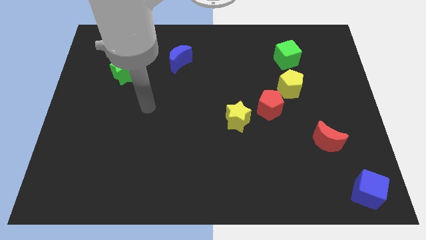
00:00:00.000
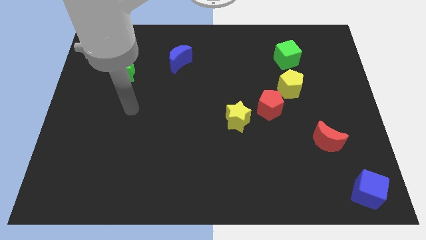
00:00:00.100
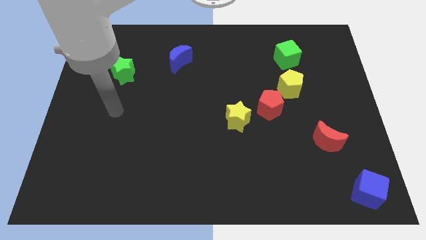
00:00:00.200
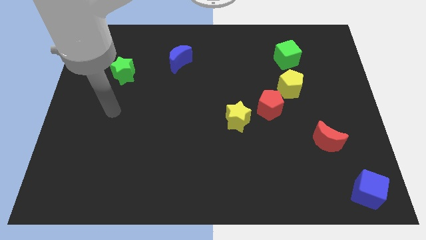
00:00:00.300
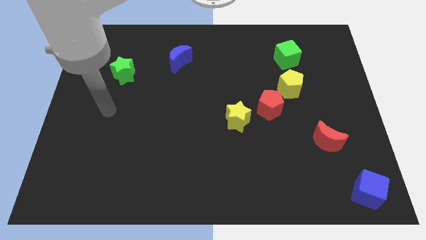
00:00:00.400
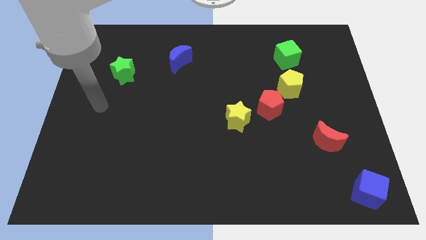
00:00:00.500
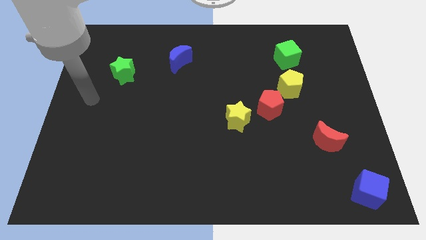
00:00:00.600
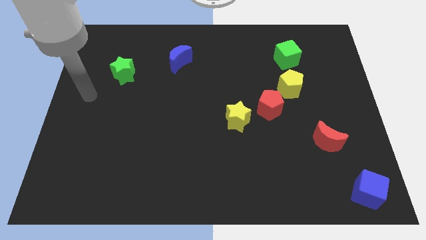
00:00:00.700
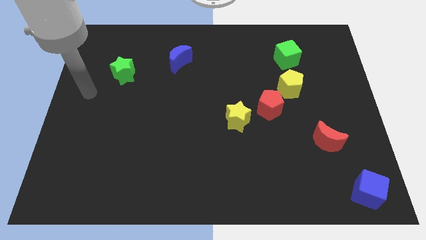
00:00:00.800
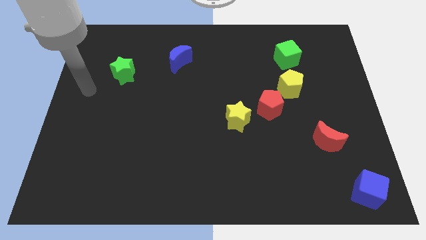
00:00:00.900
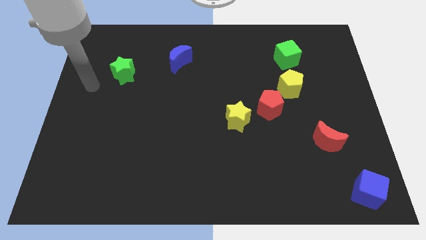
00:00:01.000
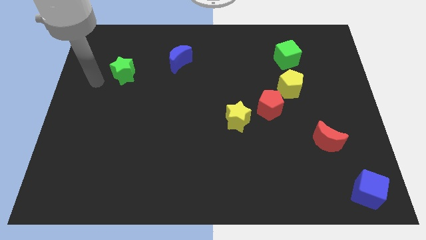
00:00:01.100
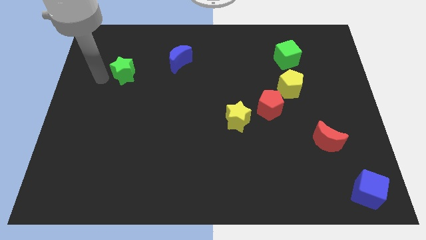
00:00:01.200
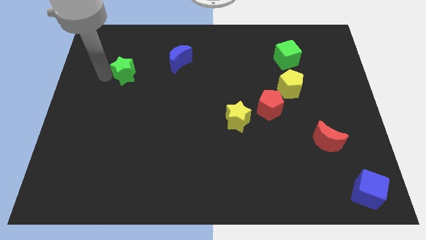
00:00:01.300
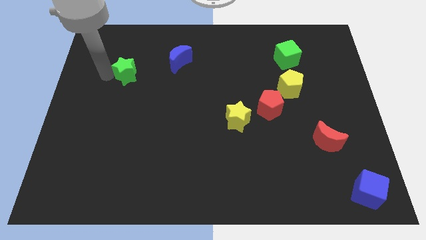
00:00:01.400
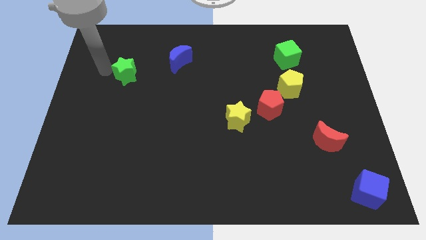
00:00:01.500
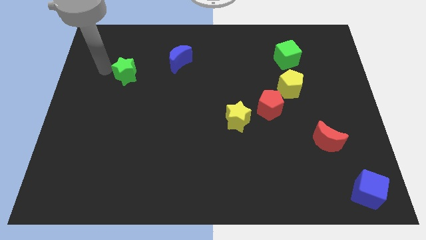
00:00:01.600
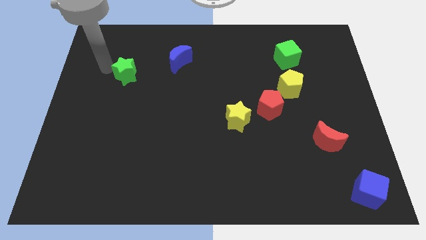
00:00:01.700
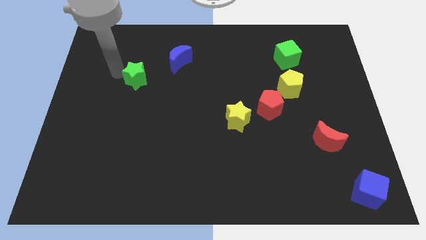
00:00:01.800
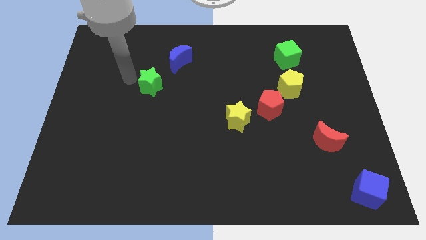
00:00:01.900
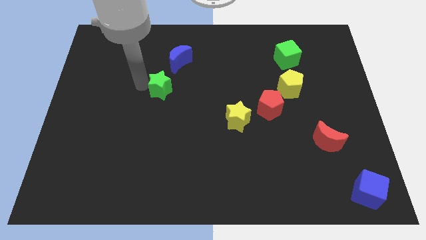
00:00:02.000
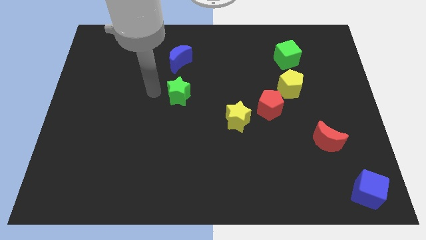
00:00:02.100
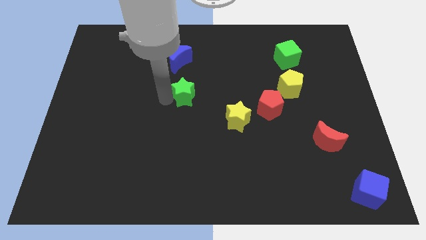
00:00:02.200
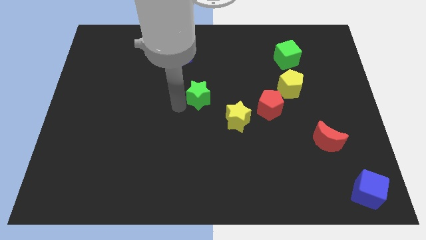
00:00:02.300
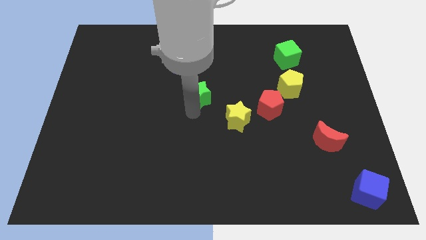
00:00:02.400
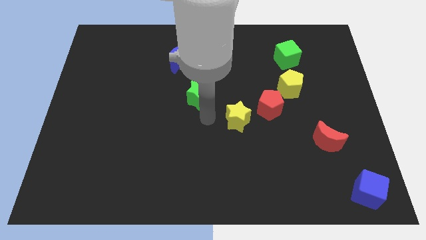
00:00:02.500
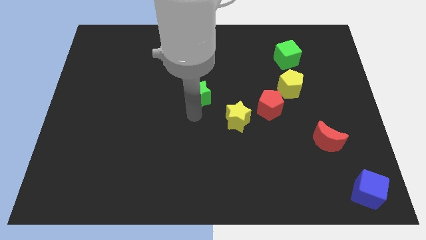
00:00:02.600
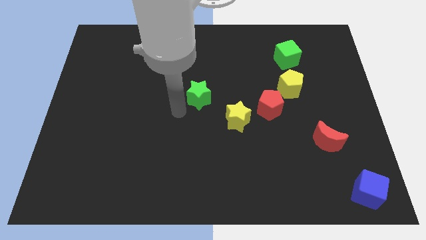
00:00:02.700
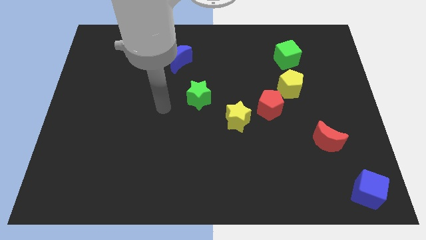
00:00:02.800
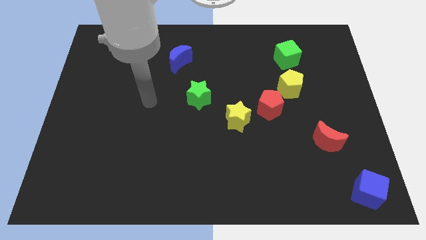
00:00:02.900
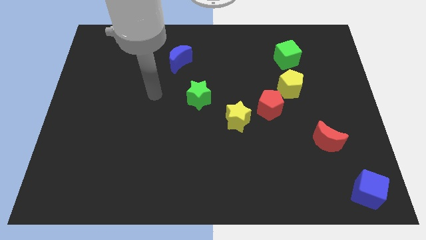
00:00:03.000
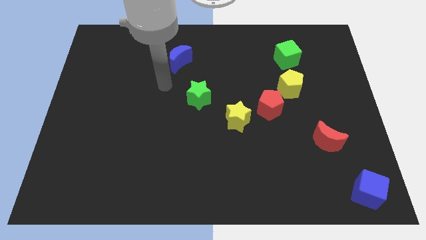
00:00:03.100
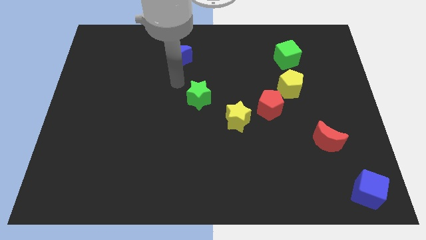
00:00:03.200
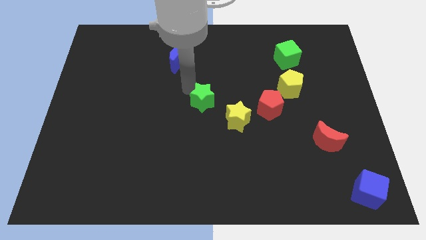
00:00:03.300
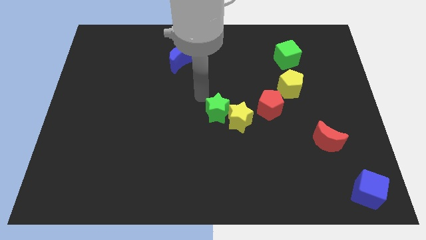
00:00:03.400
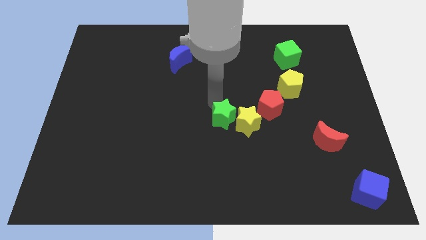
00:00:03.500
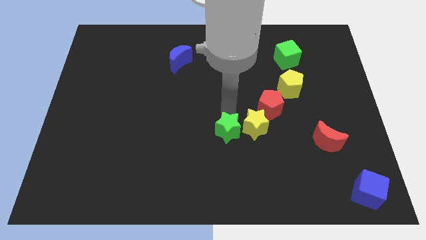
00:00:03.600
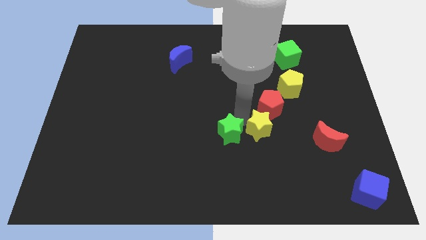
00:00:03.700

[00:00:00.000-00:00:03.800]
push the green star left to the yellow star

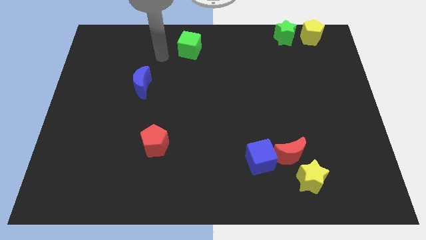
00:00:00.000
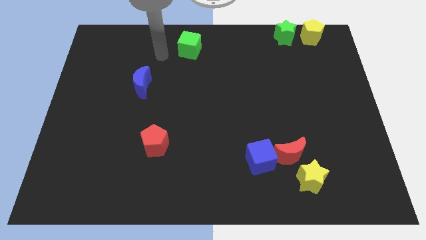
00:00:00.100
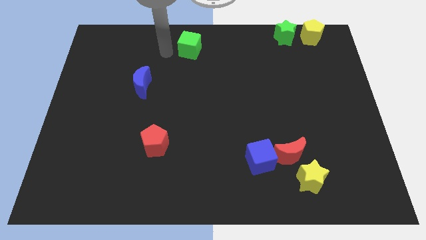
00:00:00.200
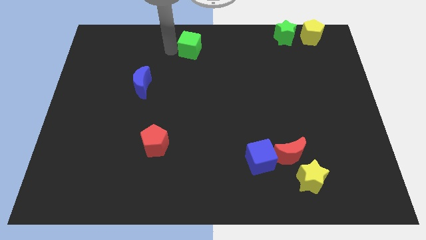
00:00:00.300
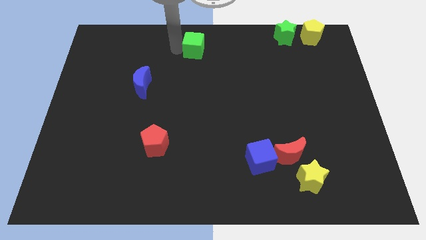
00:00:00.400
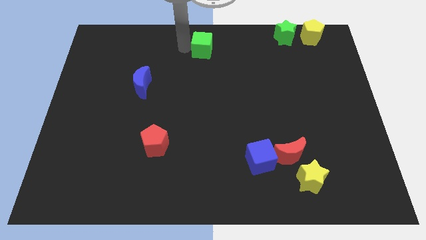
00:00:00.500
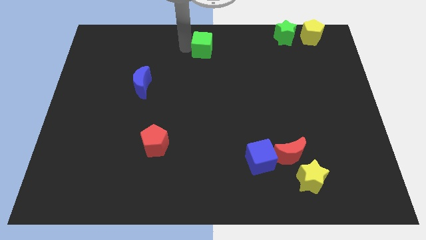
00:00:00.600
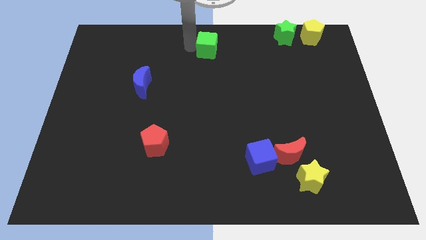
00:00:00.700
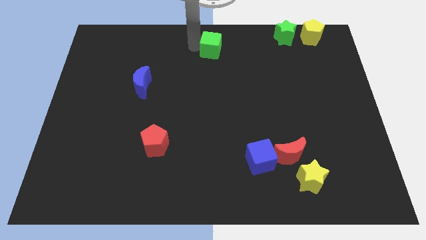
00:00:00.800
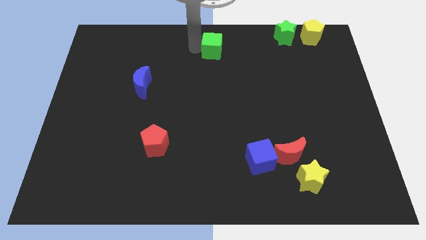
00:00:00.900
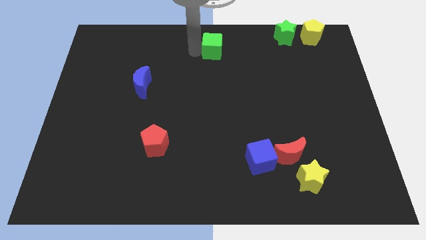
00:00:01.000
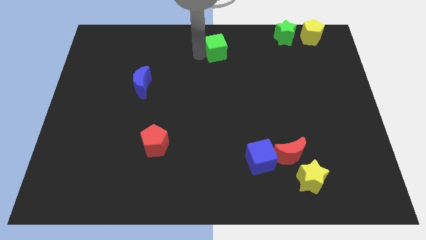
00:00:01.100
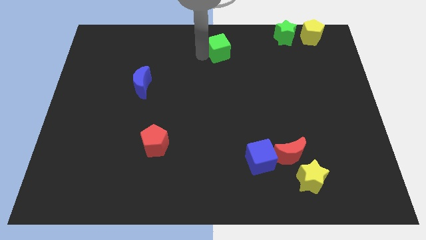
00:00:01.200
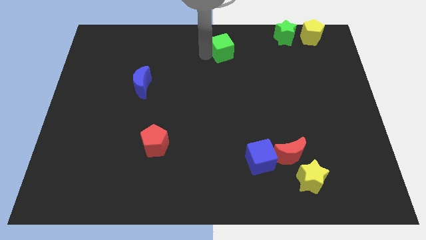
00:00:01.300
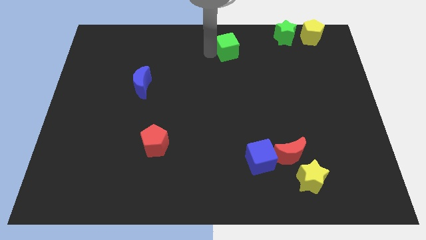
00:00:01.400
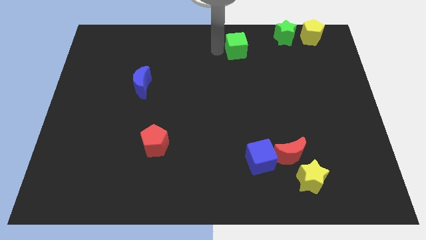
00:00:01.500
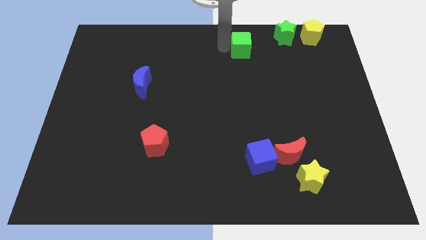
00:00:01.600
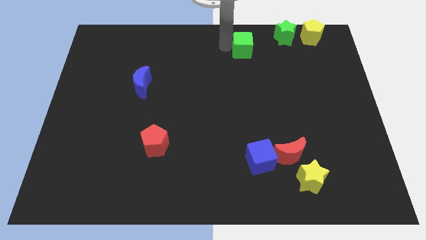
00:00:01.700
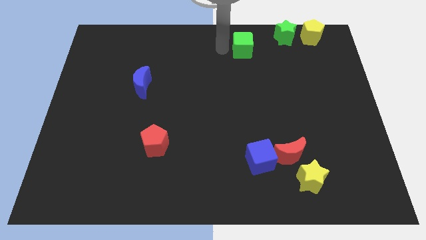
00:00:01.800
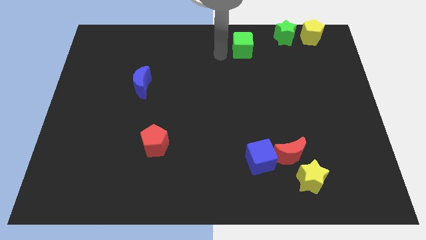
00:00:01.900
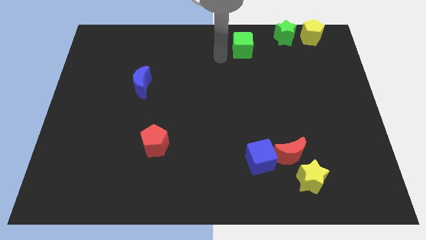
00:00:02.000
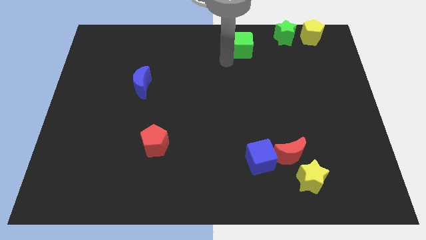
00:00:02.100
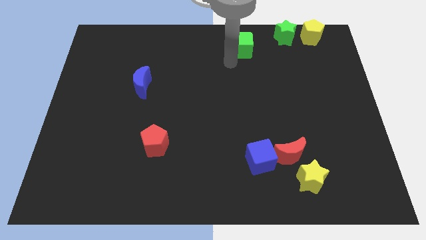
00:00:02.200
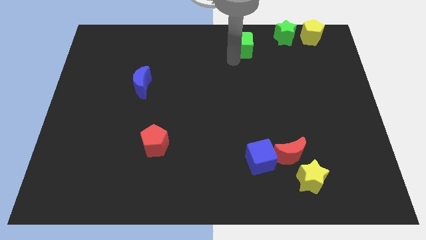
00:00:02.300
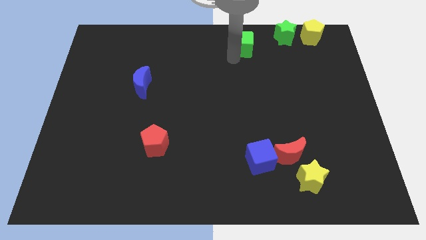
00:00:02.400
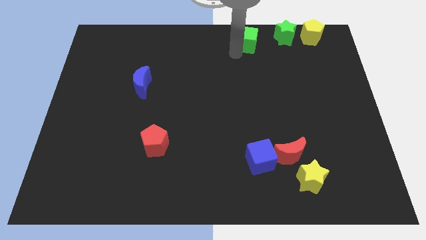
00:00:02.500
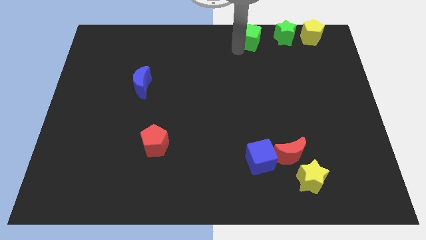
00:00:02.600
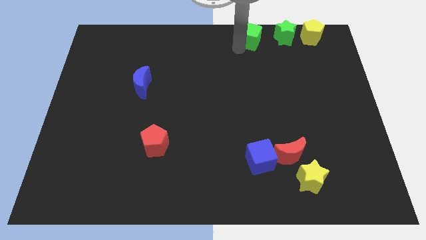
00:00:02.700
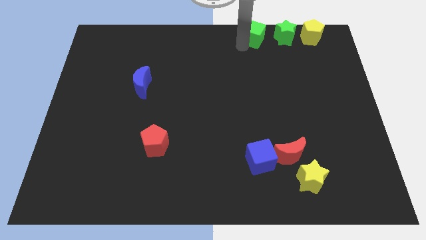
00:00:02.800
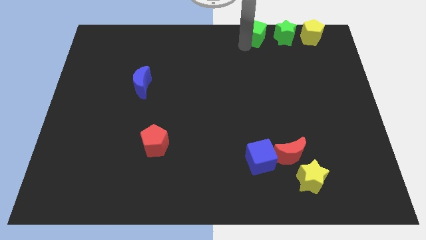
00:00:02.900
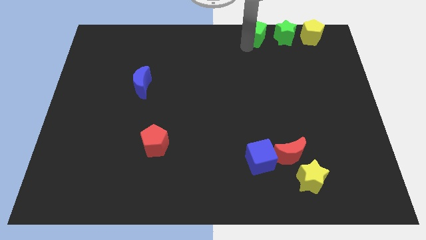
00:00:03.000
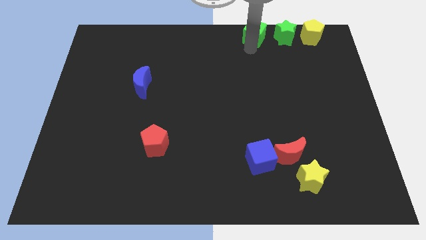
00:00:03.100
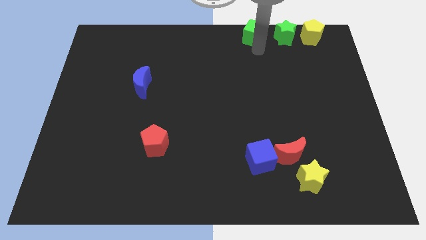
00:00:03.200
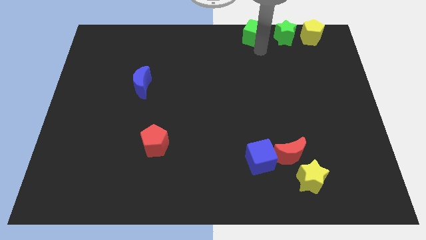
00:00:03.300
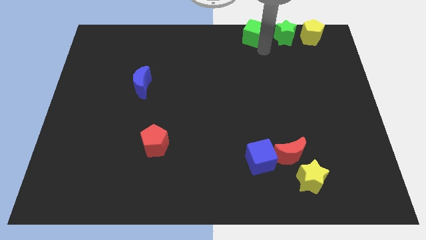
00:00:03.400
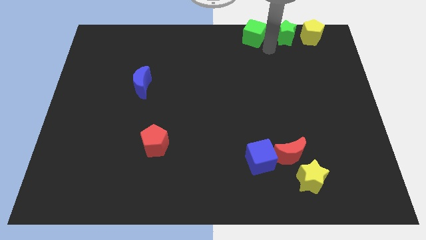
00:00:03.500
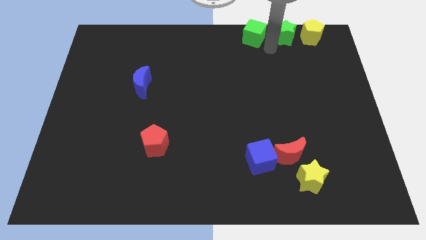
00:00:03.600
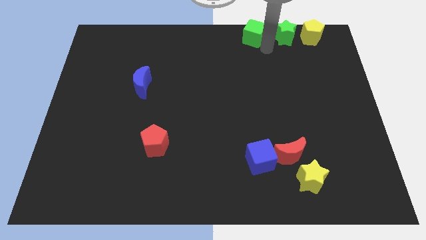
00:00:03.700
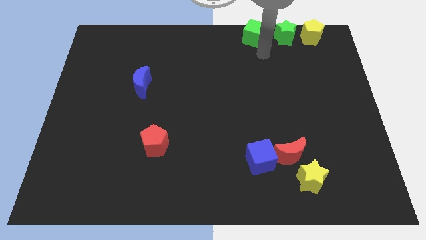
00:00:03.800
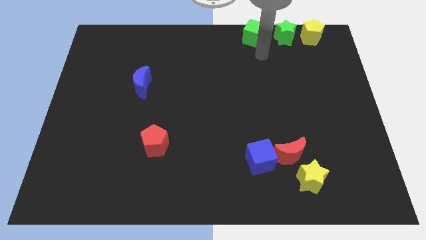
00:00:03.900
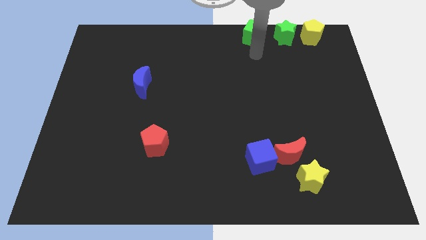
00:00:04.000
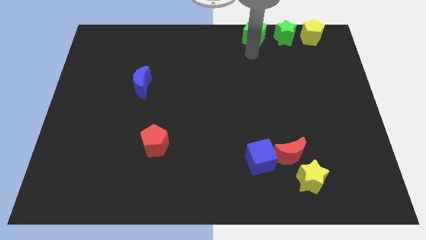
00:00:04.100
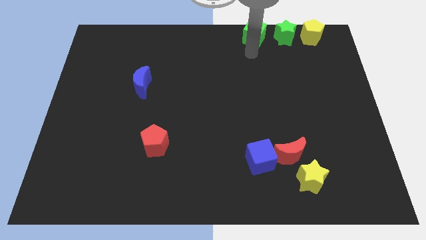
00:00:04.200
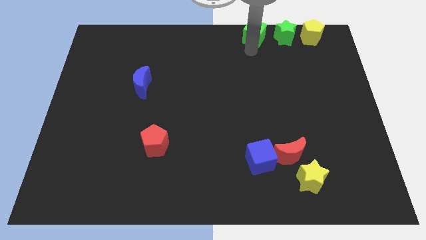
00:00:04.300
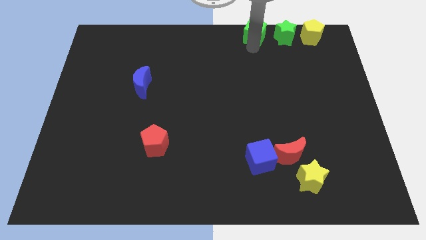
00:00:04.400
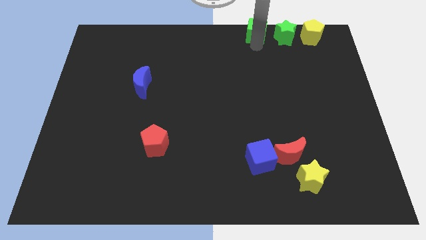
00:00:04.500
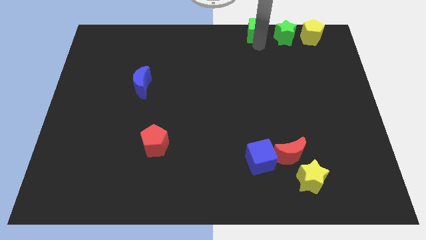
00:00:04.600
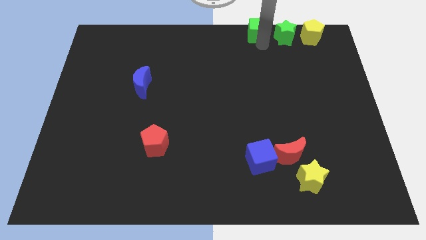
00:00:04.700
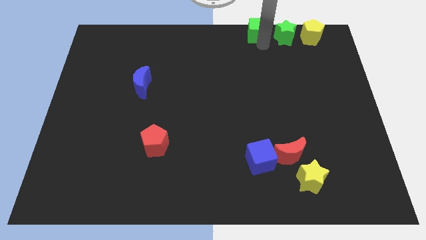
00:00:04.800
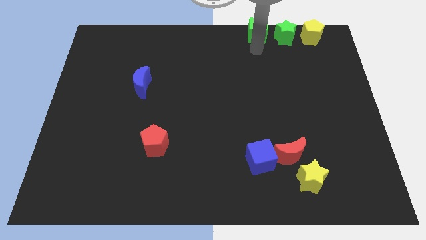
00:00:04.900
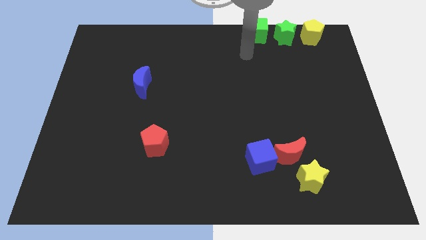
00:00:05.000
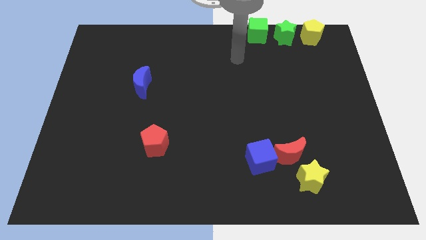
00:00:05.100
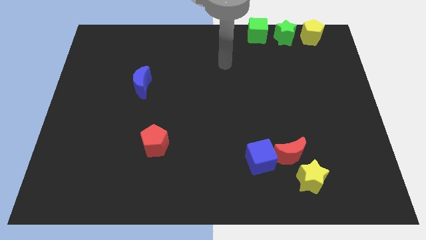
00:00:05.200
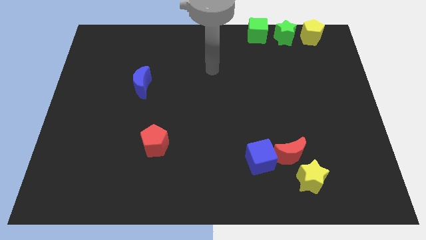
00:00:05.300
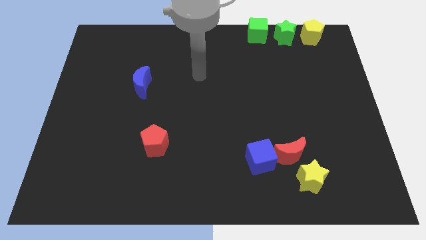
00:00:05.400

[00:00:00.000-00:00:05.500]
move the green cube to the left side of the green star
